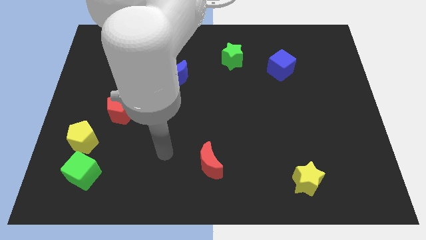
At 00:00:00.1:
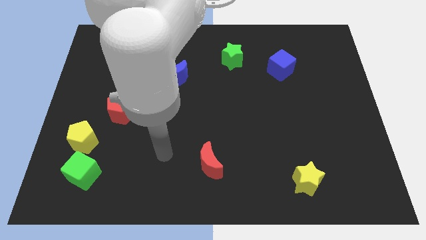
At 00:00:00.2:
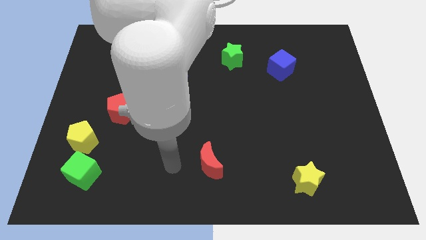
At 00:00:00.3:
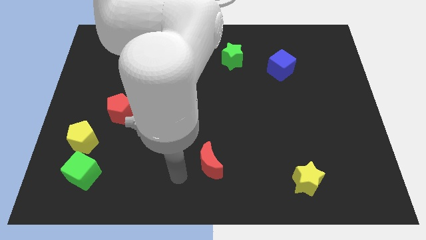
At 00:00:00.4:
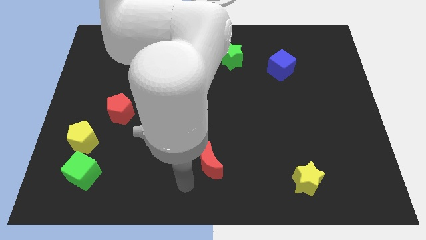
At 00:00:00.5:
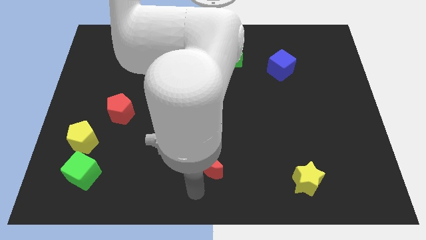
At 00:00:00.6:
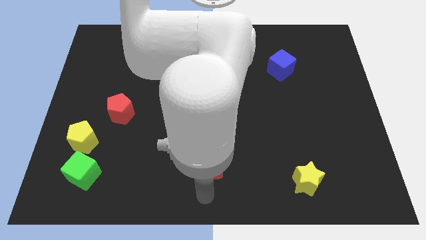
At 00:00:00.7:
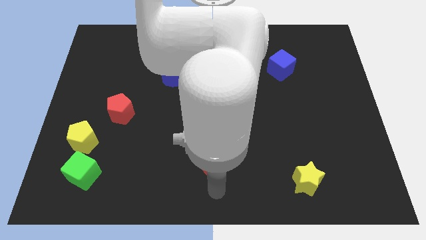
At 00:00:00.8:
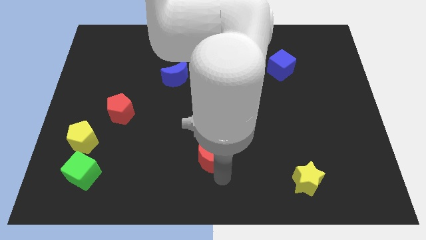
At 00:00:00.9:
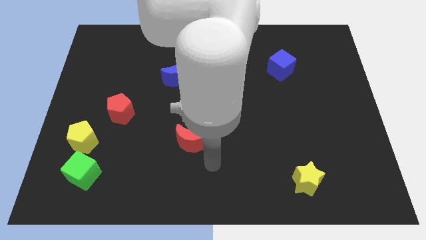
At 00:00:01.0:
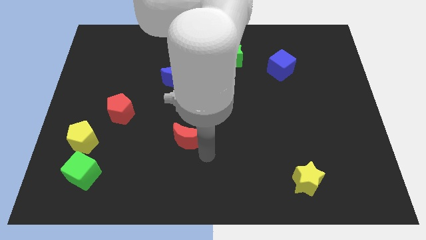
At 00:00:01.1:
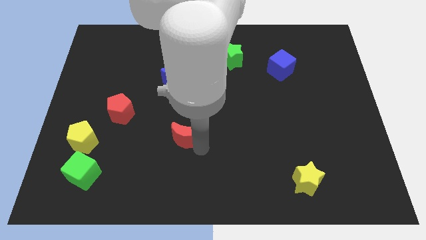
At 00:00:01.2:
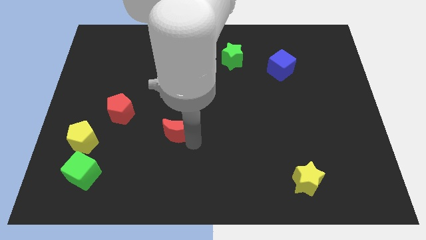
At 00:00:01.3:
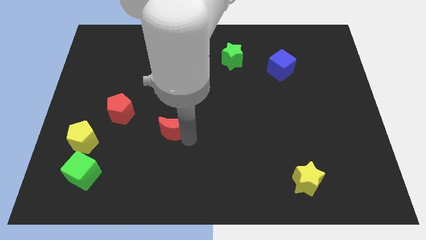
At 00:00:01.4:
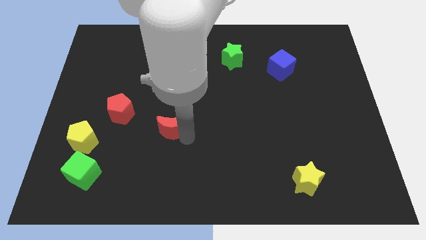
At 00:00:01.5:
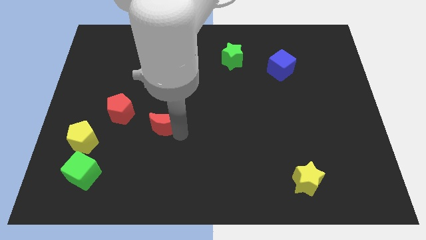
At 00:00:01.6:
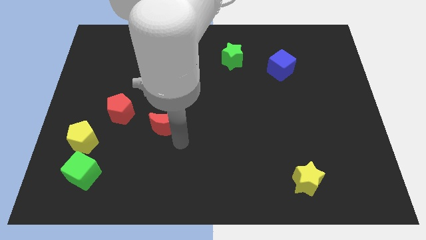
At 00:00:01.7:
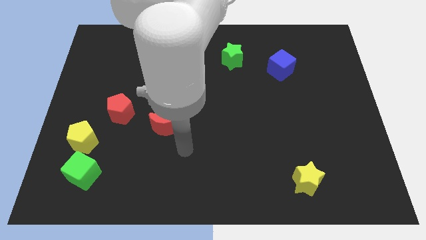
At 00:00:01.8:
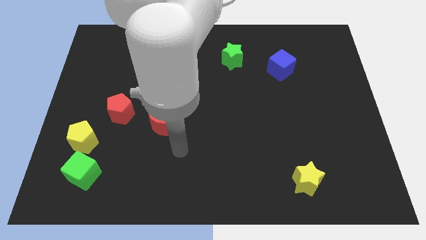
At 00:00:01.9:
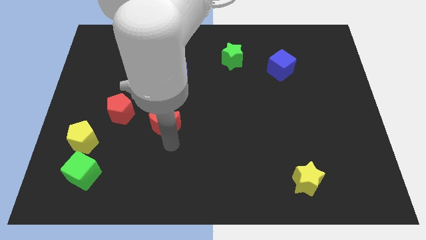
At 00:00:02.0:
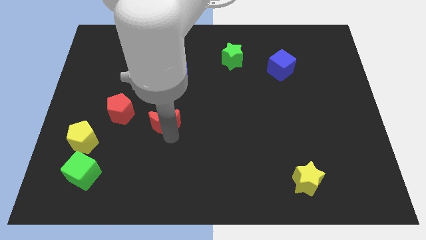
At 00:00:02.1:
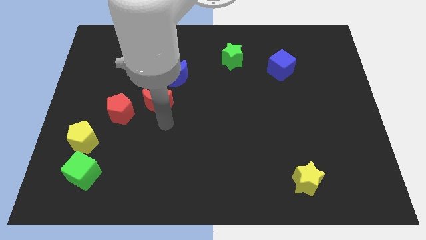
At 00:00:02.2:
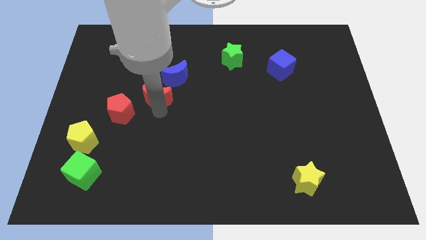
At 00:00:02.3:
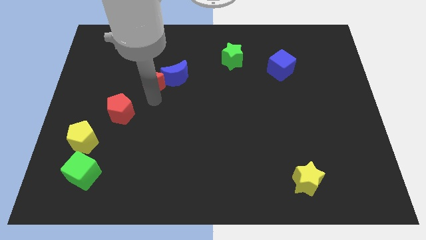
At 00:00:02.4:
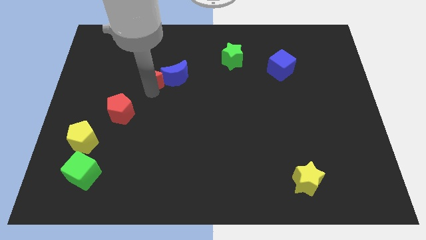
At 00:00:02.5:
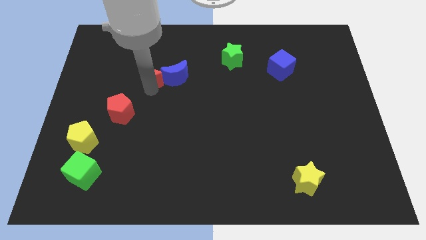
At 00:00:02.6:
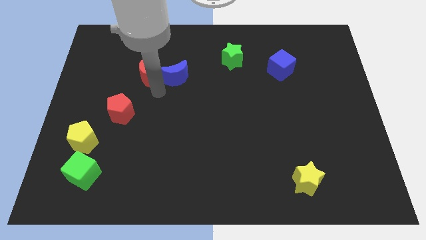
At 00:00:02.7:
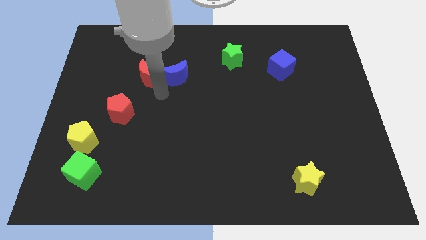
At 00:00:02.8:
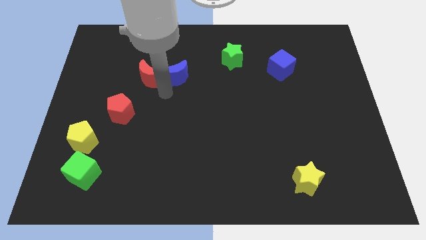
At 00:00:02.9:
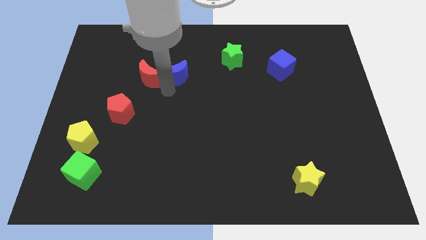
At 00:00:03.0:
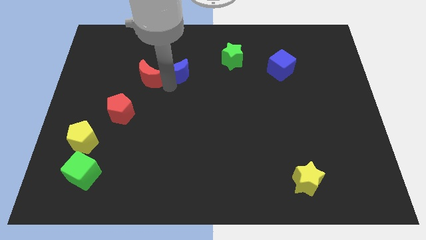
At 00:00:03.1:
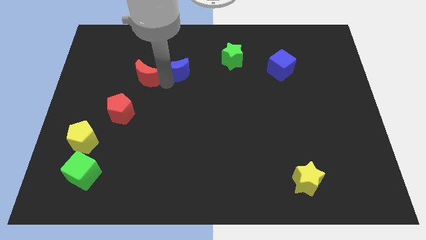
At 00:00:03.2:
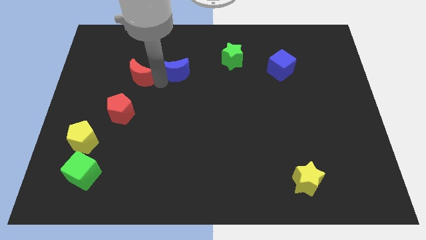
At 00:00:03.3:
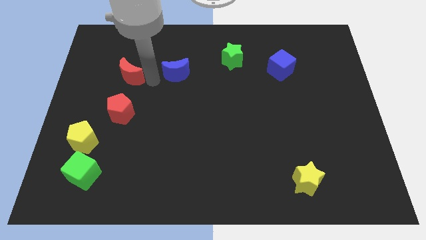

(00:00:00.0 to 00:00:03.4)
push red moon close to blue moon

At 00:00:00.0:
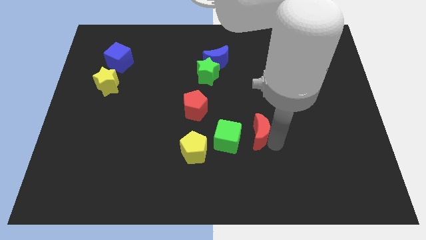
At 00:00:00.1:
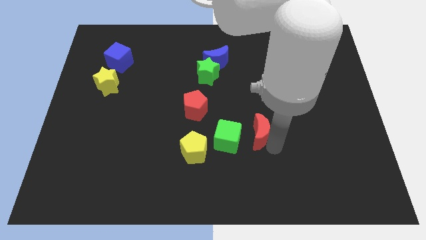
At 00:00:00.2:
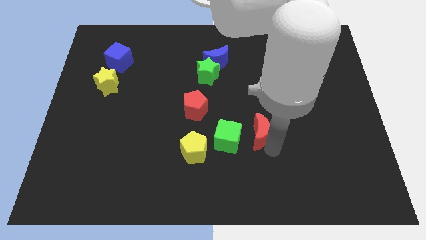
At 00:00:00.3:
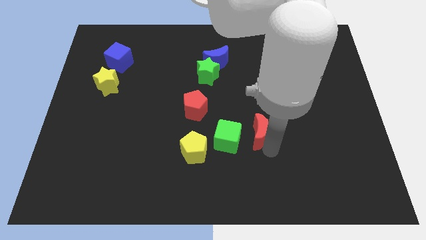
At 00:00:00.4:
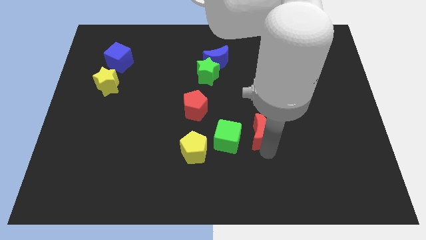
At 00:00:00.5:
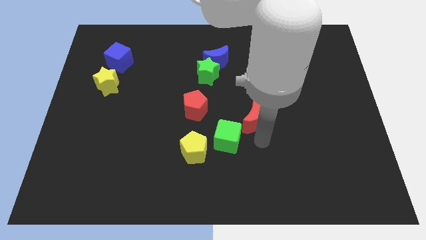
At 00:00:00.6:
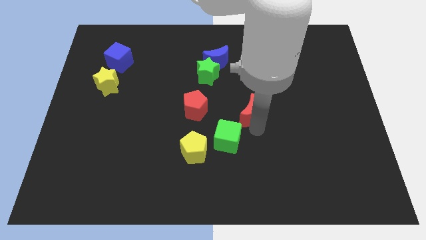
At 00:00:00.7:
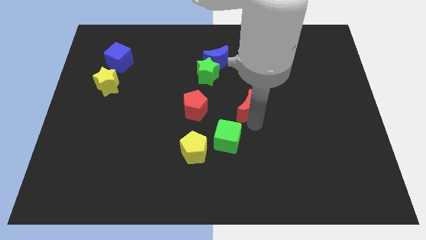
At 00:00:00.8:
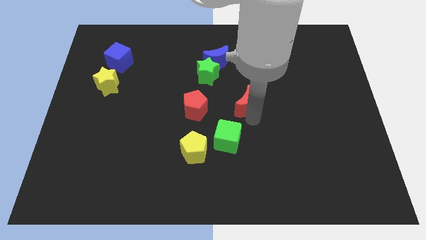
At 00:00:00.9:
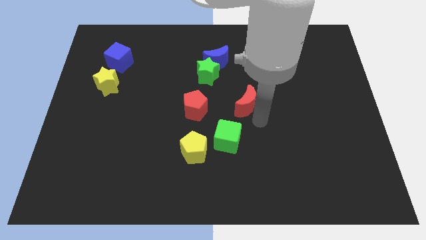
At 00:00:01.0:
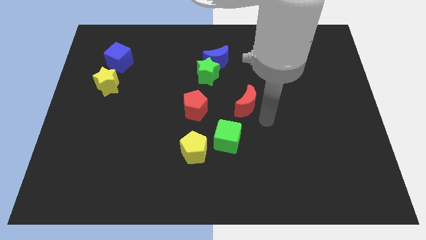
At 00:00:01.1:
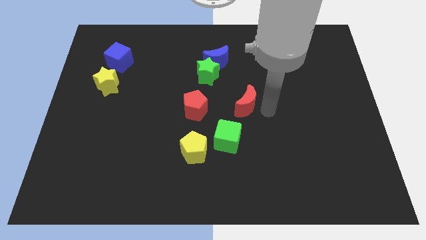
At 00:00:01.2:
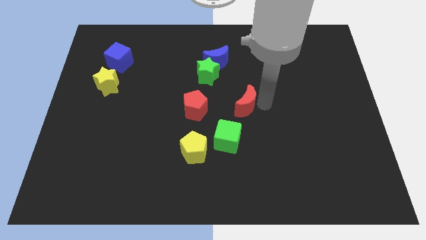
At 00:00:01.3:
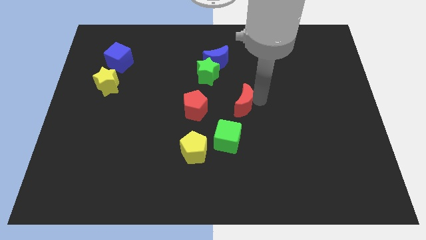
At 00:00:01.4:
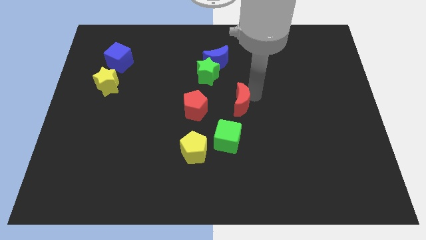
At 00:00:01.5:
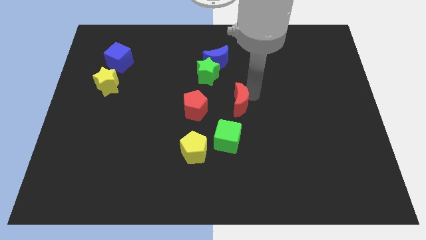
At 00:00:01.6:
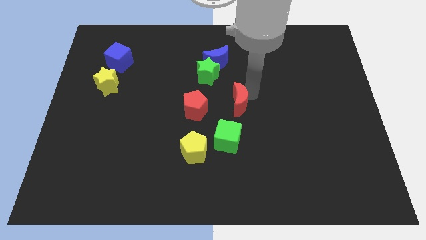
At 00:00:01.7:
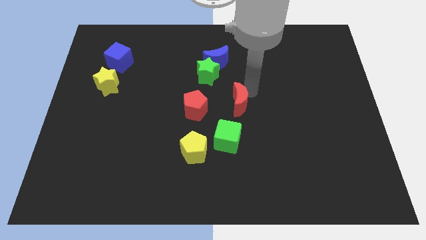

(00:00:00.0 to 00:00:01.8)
place red crescent right to red pentagon

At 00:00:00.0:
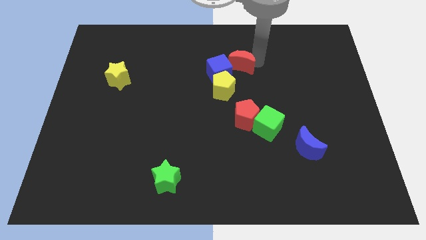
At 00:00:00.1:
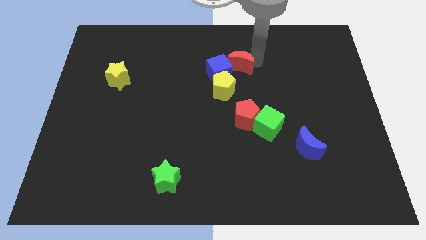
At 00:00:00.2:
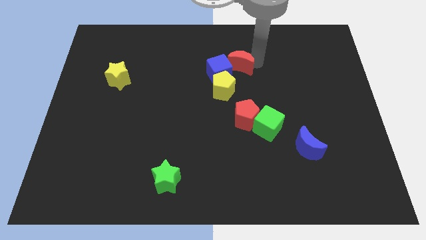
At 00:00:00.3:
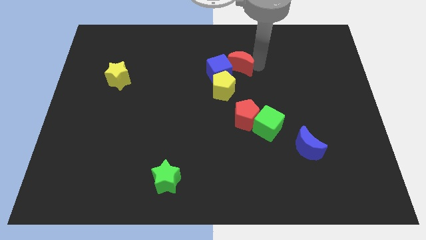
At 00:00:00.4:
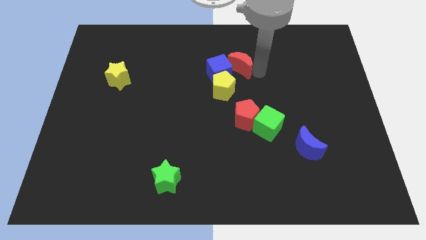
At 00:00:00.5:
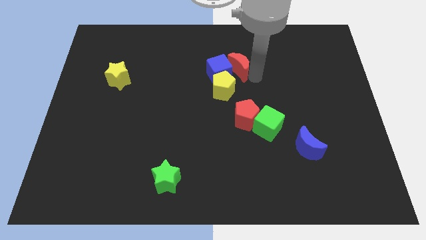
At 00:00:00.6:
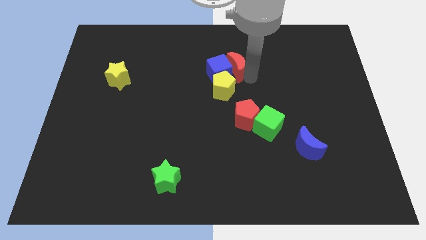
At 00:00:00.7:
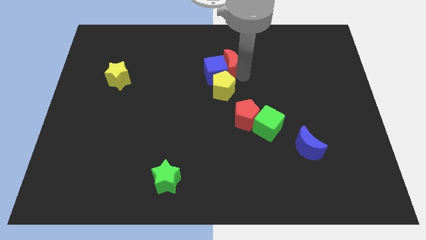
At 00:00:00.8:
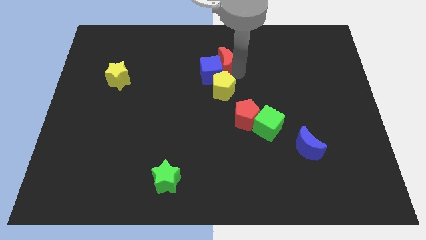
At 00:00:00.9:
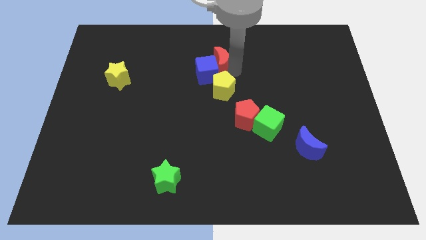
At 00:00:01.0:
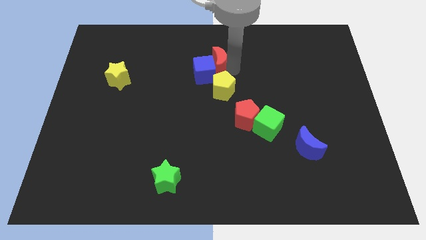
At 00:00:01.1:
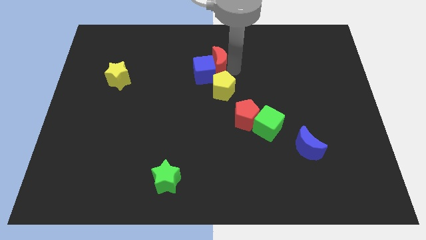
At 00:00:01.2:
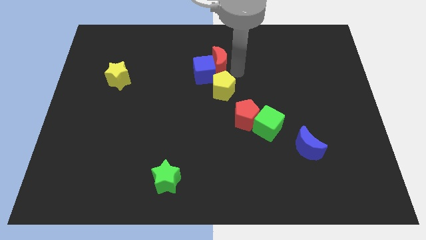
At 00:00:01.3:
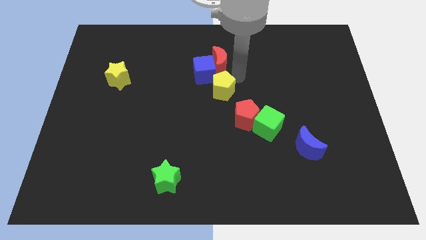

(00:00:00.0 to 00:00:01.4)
push the red crescent into the blue cube

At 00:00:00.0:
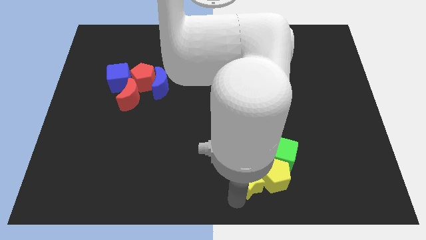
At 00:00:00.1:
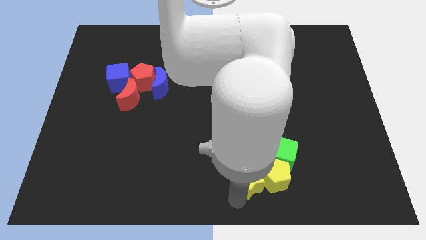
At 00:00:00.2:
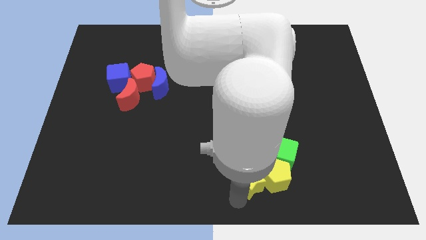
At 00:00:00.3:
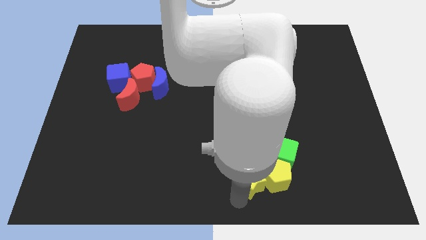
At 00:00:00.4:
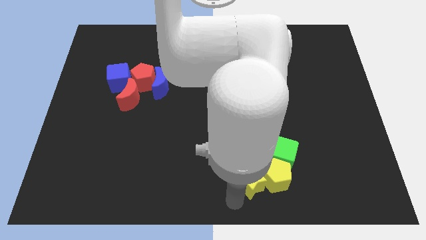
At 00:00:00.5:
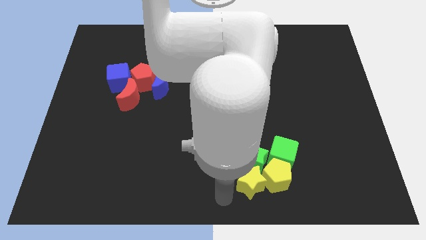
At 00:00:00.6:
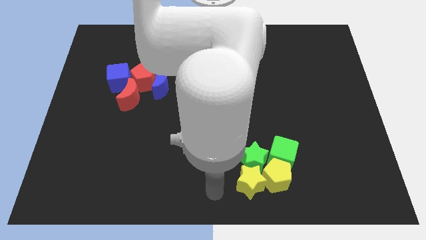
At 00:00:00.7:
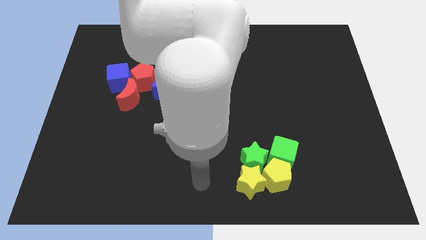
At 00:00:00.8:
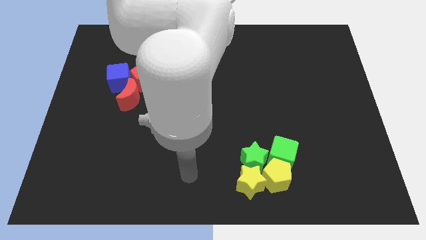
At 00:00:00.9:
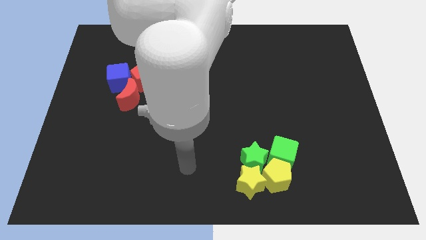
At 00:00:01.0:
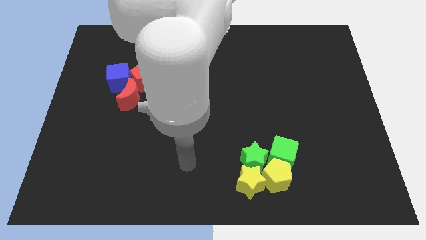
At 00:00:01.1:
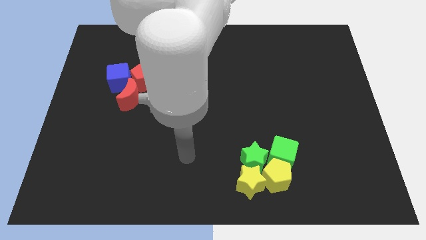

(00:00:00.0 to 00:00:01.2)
move the arm away from the yellow star

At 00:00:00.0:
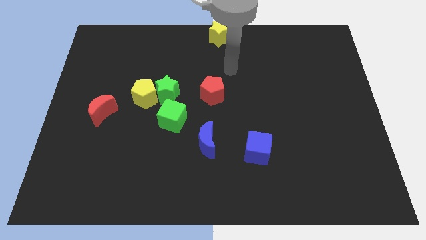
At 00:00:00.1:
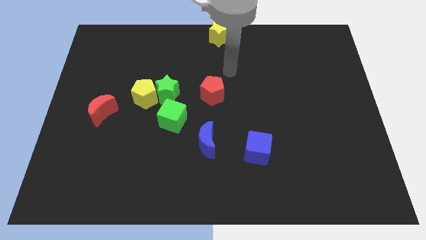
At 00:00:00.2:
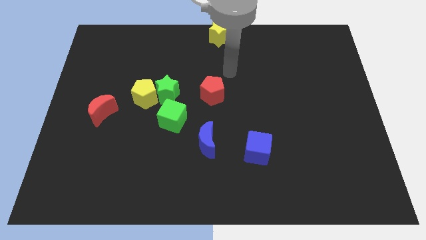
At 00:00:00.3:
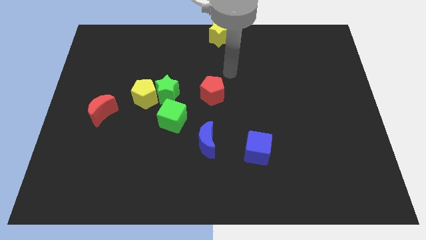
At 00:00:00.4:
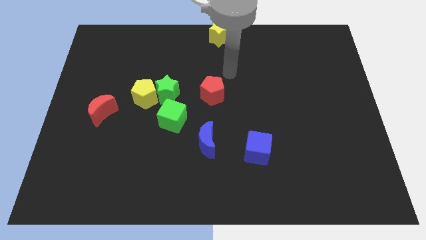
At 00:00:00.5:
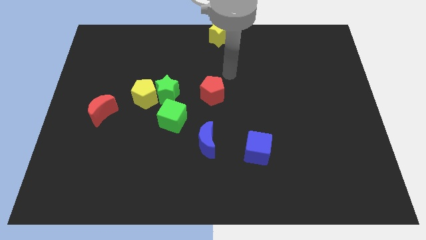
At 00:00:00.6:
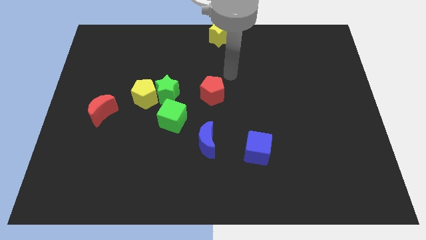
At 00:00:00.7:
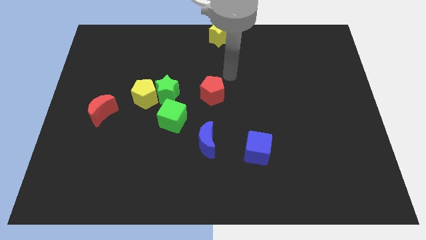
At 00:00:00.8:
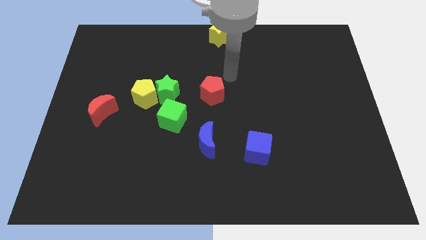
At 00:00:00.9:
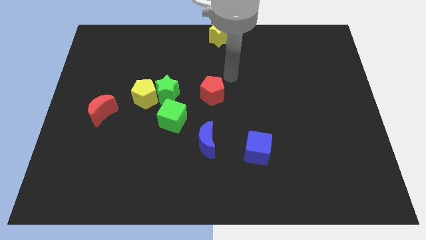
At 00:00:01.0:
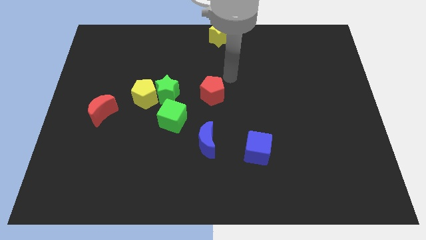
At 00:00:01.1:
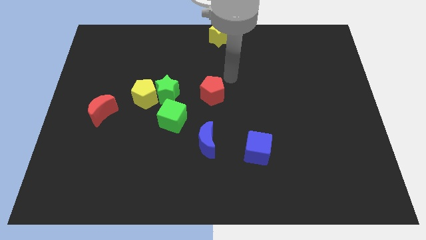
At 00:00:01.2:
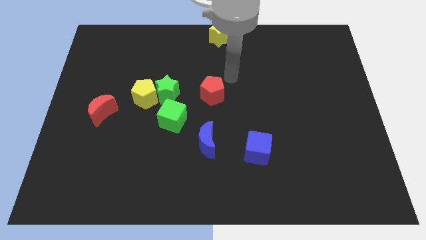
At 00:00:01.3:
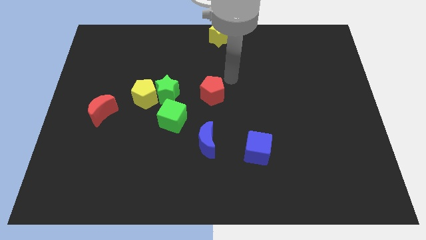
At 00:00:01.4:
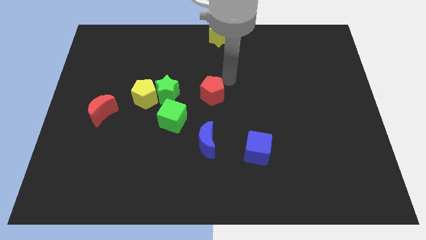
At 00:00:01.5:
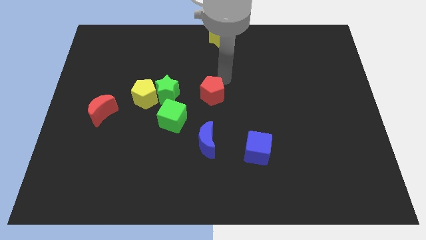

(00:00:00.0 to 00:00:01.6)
move yourself close to the top right of the red pentagon
